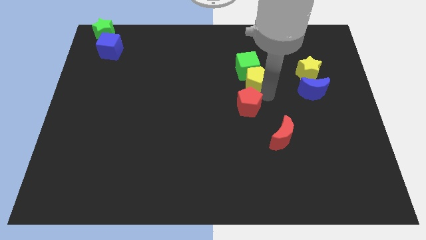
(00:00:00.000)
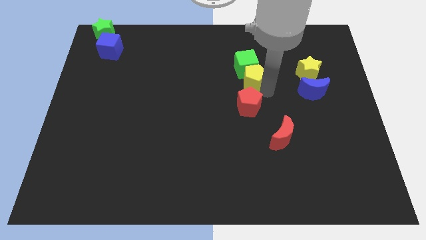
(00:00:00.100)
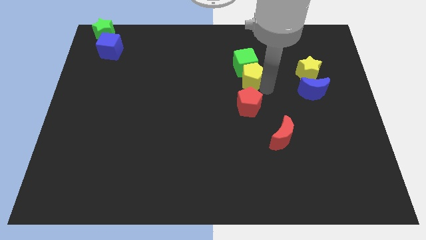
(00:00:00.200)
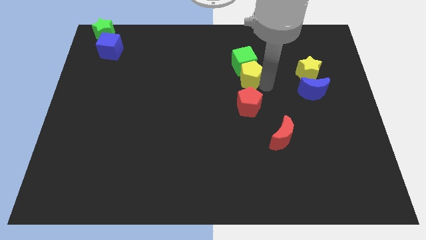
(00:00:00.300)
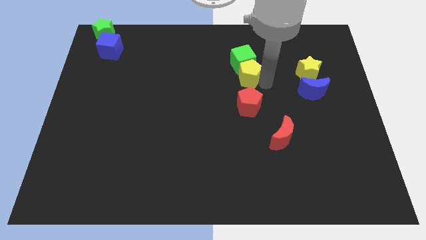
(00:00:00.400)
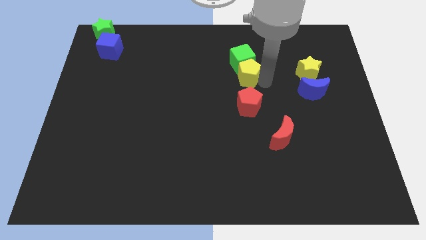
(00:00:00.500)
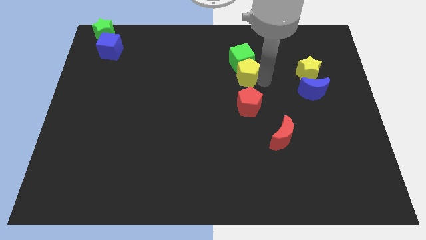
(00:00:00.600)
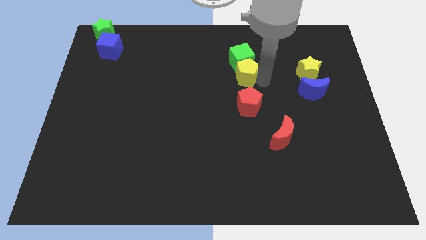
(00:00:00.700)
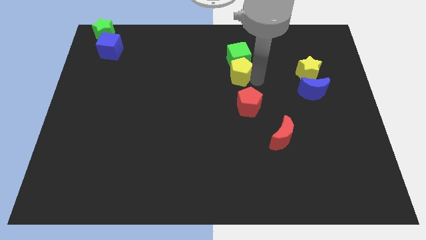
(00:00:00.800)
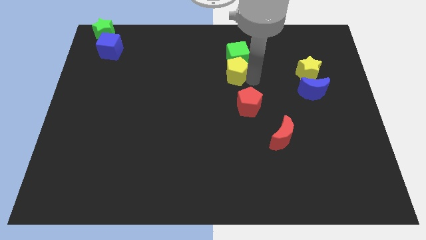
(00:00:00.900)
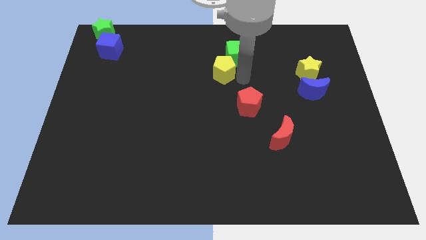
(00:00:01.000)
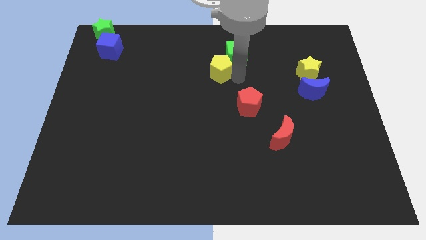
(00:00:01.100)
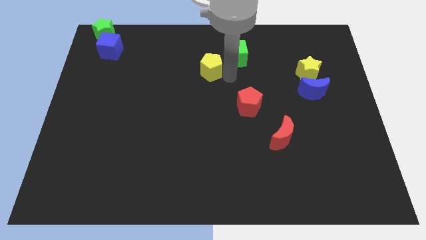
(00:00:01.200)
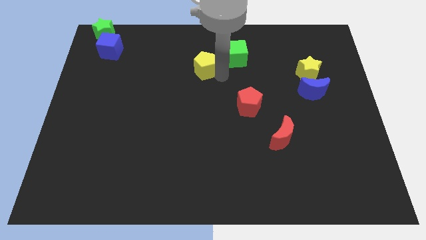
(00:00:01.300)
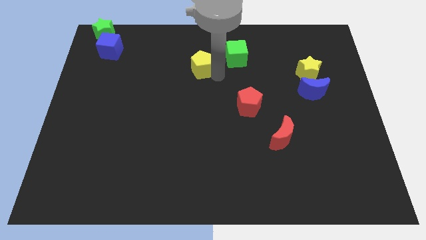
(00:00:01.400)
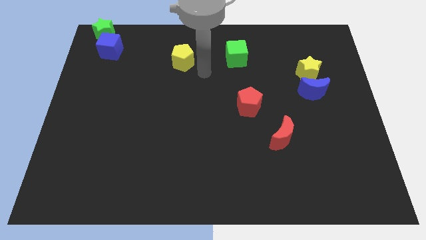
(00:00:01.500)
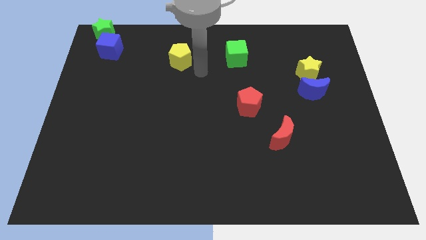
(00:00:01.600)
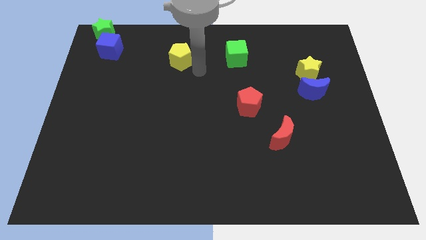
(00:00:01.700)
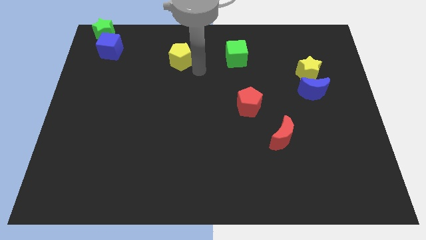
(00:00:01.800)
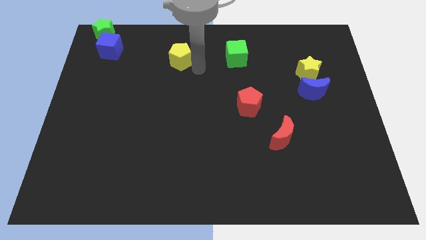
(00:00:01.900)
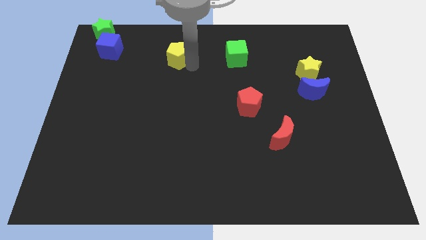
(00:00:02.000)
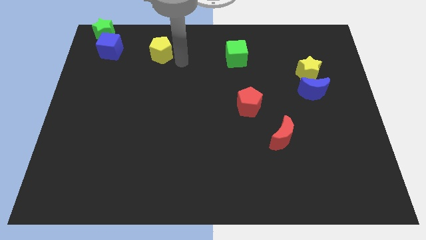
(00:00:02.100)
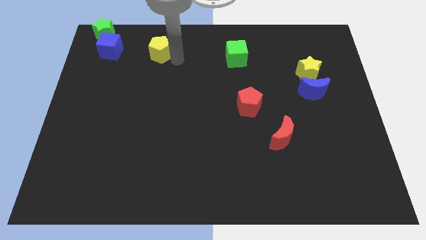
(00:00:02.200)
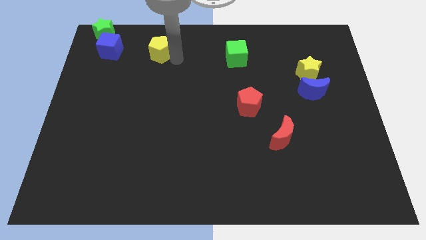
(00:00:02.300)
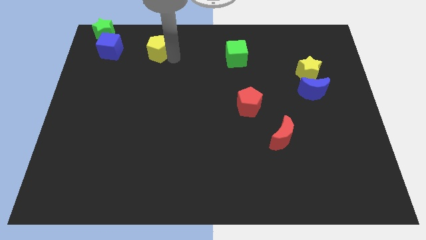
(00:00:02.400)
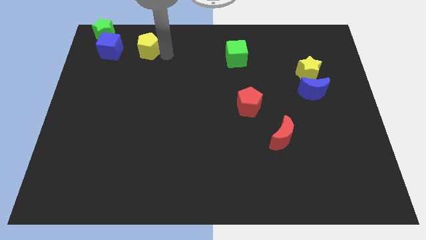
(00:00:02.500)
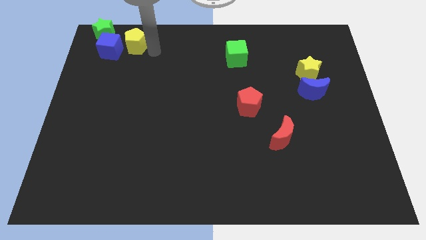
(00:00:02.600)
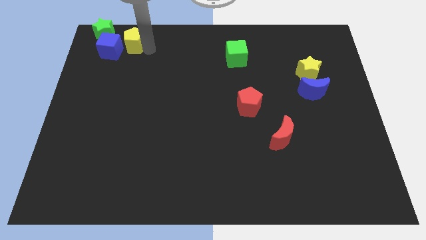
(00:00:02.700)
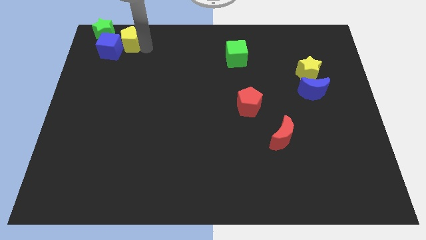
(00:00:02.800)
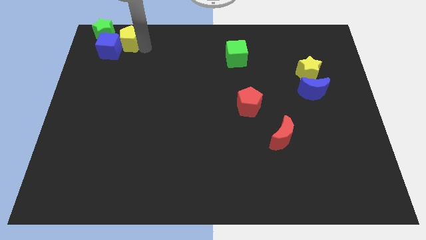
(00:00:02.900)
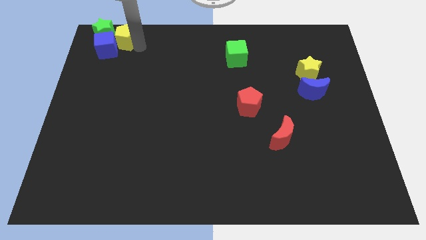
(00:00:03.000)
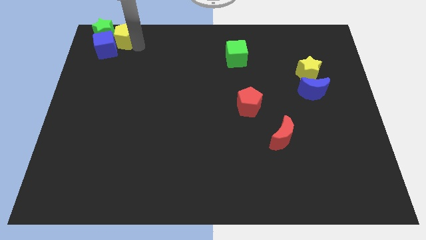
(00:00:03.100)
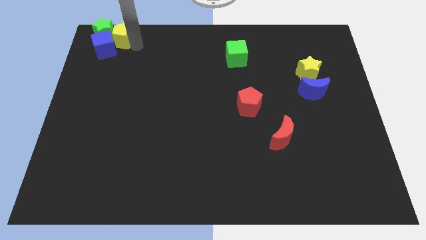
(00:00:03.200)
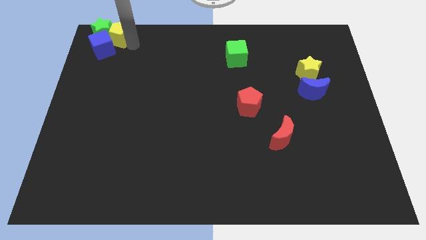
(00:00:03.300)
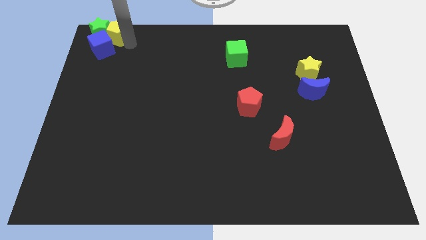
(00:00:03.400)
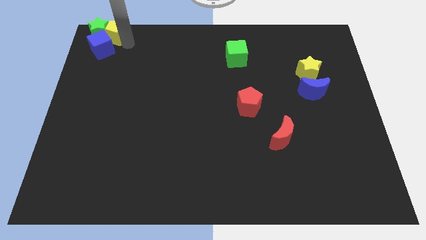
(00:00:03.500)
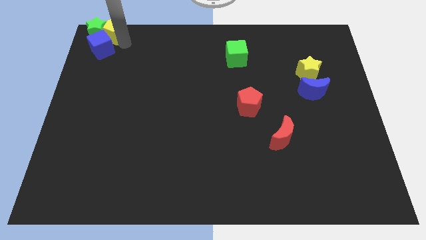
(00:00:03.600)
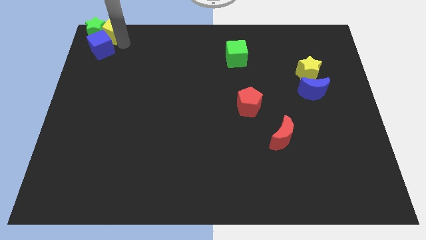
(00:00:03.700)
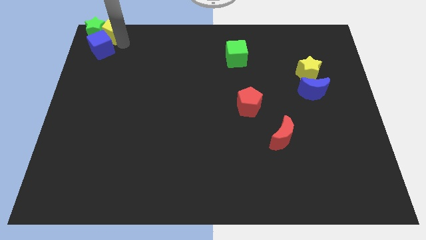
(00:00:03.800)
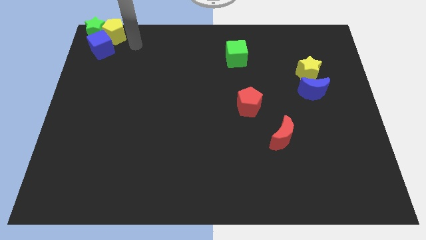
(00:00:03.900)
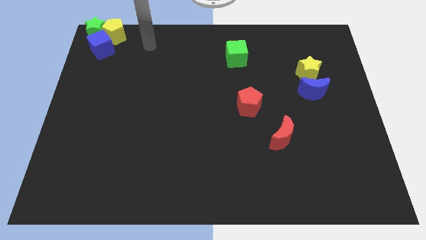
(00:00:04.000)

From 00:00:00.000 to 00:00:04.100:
push the yellow pentagon right to the green star

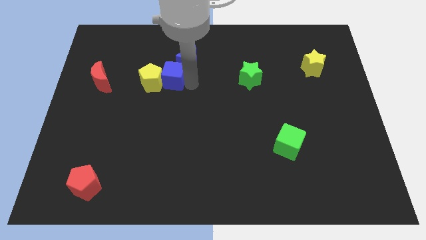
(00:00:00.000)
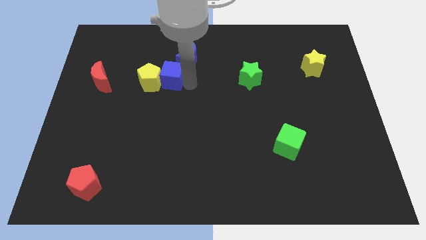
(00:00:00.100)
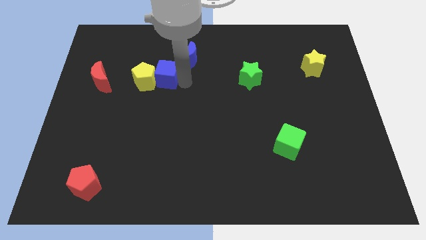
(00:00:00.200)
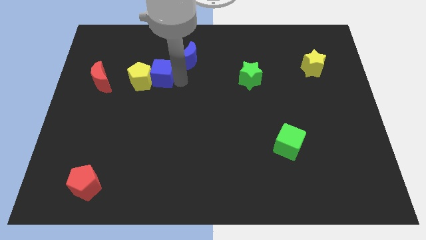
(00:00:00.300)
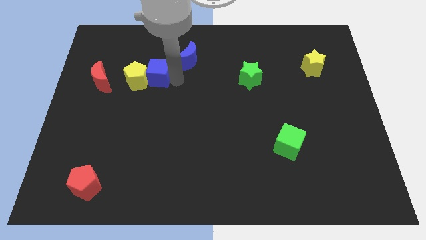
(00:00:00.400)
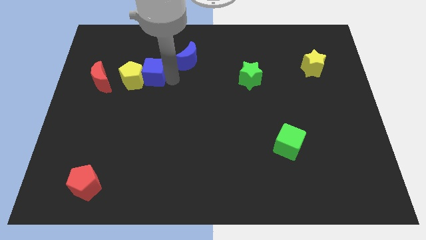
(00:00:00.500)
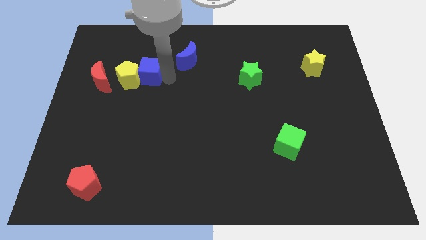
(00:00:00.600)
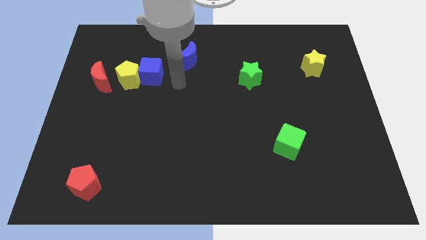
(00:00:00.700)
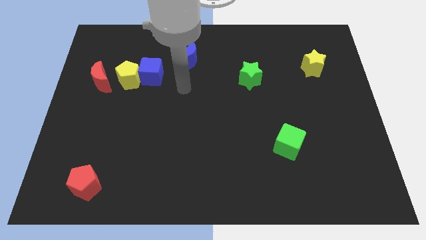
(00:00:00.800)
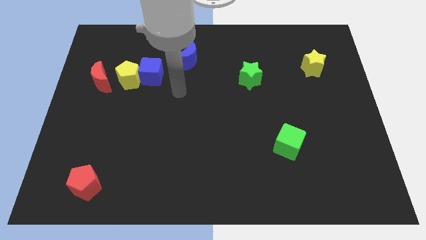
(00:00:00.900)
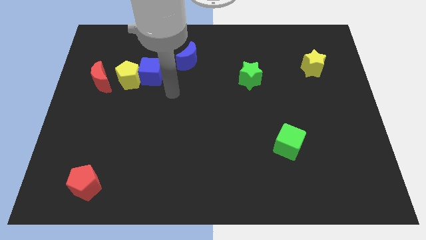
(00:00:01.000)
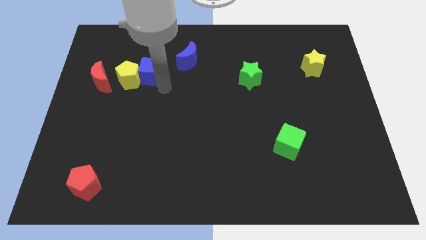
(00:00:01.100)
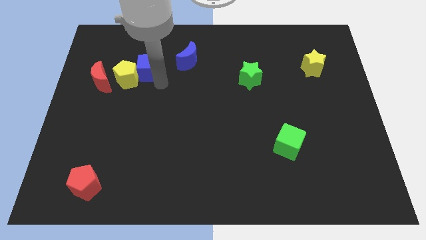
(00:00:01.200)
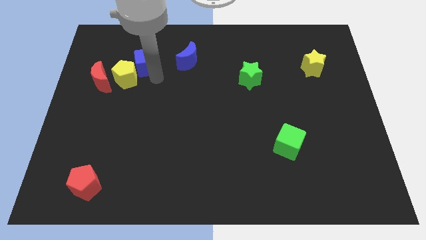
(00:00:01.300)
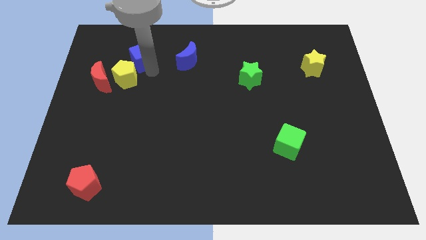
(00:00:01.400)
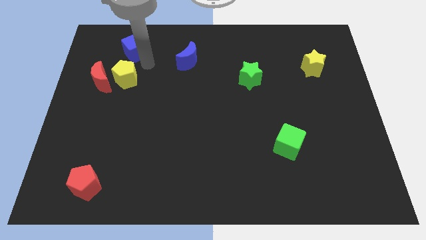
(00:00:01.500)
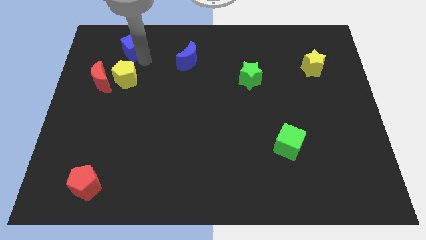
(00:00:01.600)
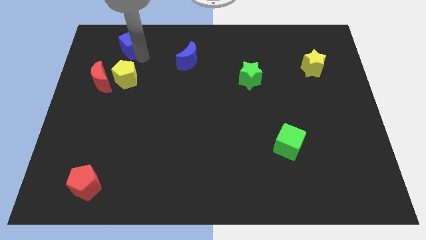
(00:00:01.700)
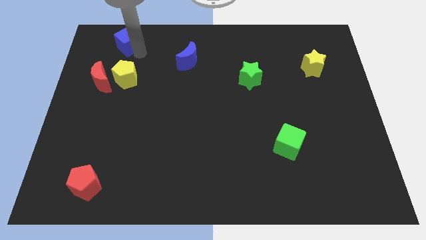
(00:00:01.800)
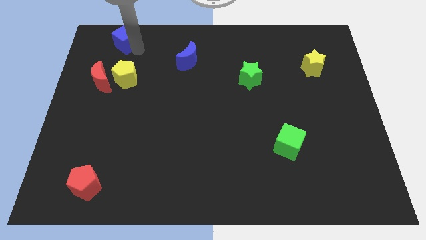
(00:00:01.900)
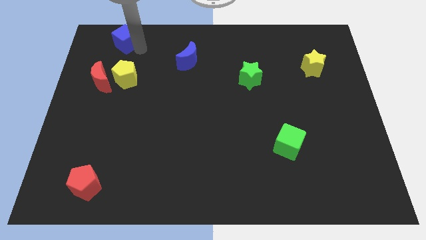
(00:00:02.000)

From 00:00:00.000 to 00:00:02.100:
push blue cube towards top of the board

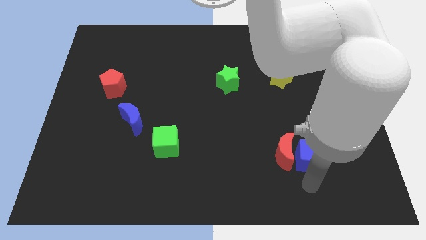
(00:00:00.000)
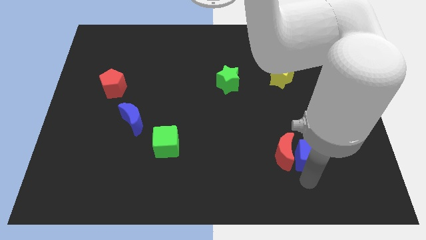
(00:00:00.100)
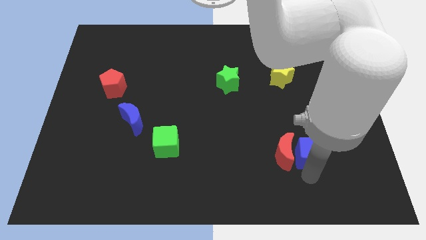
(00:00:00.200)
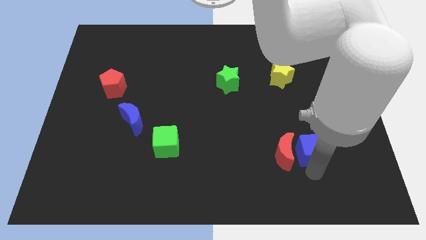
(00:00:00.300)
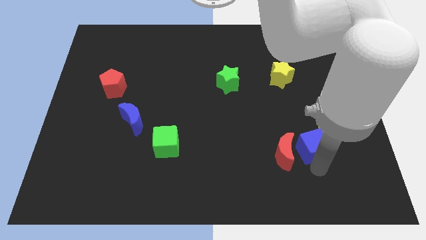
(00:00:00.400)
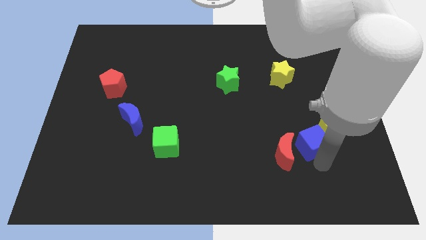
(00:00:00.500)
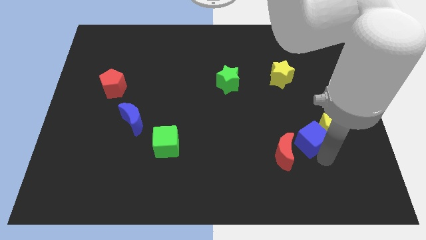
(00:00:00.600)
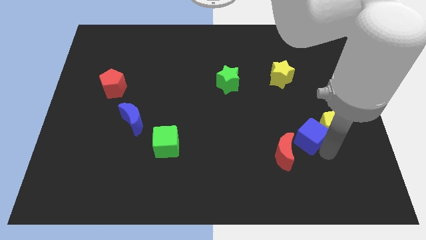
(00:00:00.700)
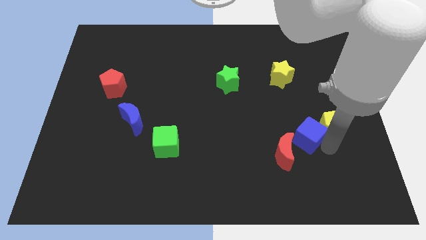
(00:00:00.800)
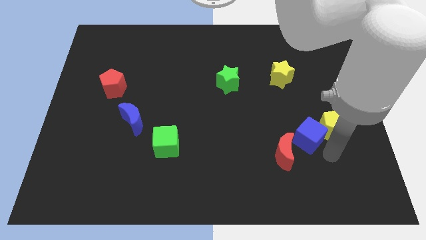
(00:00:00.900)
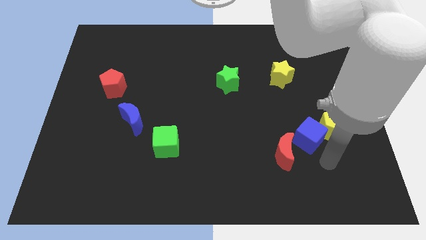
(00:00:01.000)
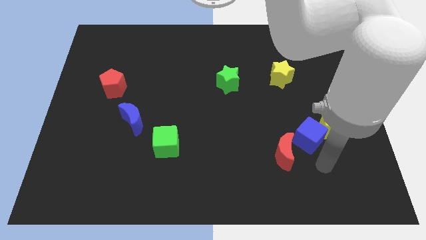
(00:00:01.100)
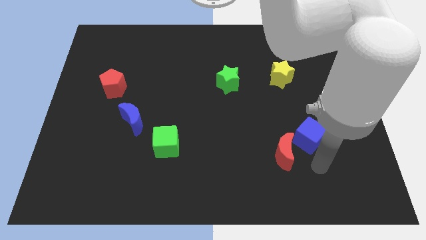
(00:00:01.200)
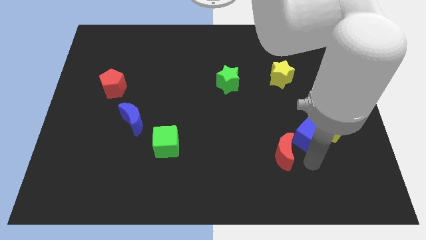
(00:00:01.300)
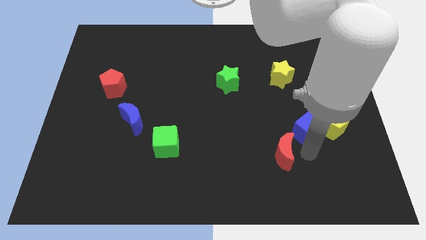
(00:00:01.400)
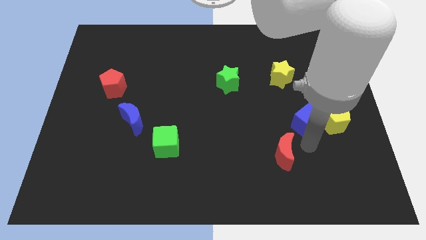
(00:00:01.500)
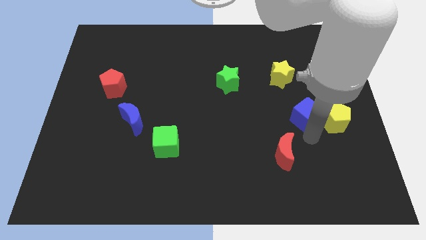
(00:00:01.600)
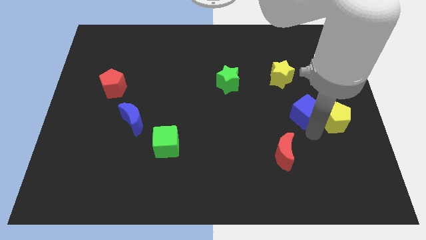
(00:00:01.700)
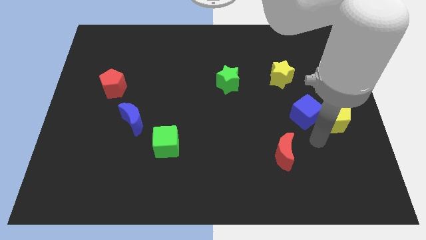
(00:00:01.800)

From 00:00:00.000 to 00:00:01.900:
push the blue cube upward

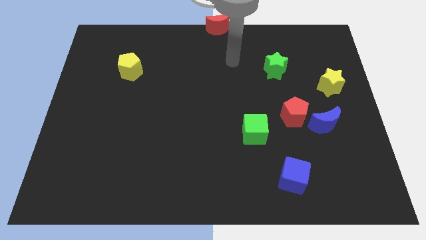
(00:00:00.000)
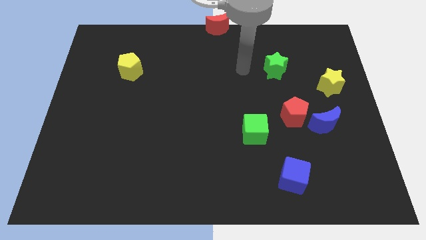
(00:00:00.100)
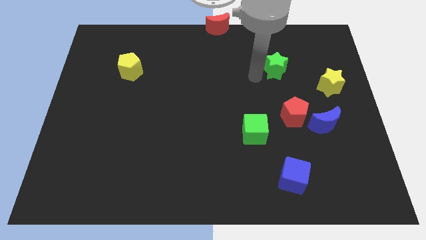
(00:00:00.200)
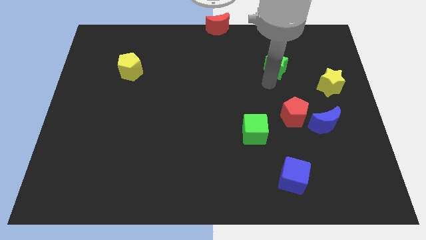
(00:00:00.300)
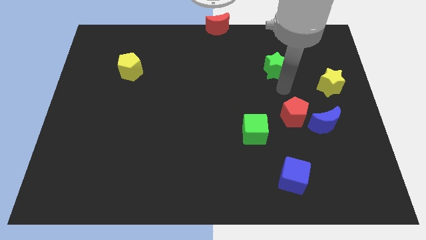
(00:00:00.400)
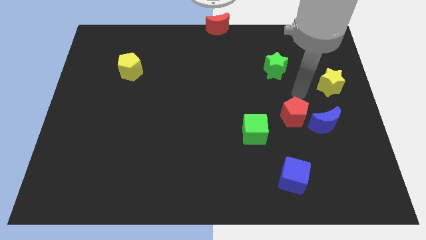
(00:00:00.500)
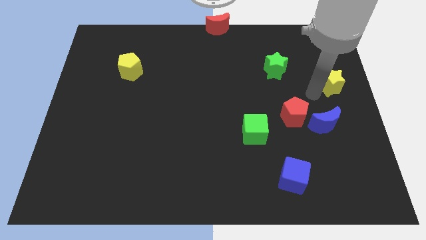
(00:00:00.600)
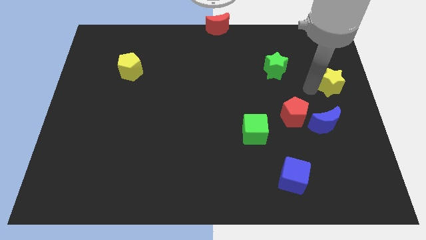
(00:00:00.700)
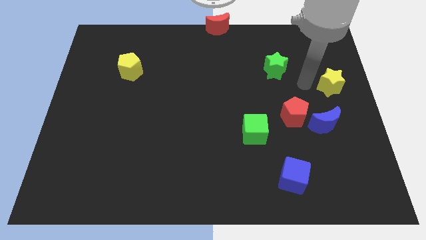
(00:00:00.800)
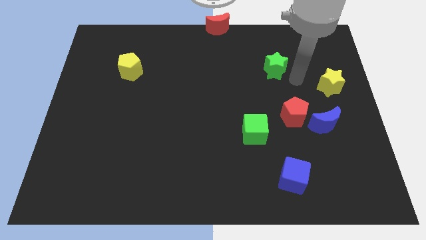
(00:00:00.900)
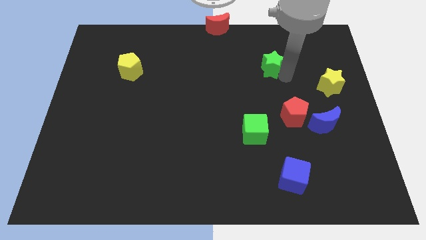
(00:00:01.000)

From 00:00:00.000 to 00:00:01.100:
move your arm towards the green star
